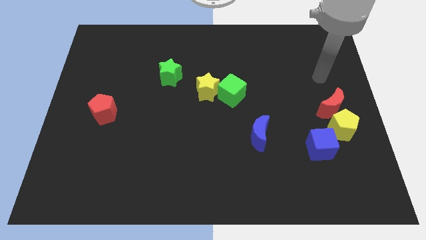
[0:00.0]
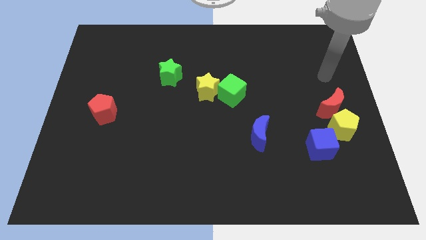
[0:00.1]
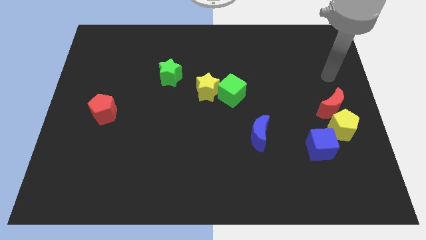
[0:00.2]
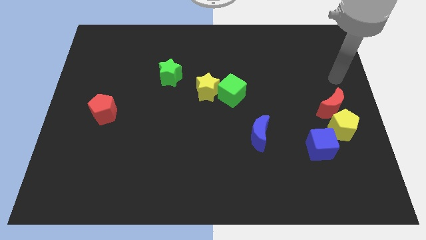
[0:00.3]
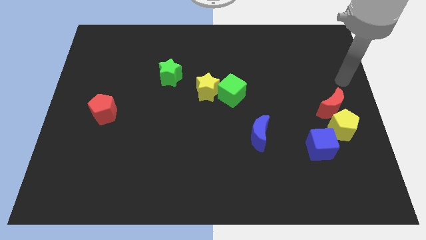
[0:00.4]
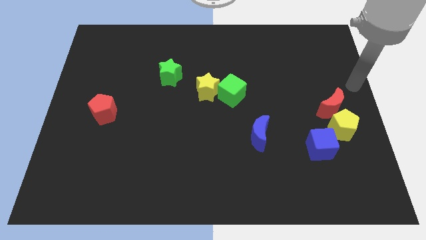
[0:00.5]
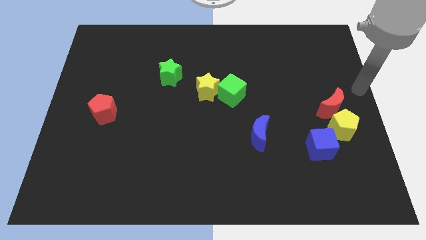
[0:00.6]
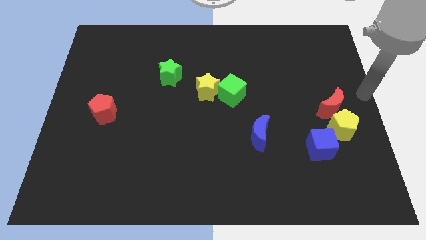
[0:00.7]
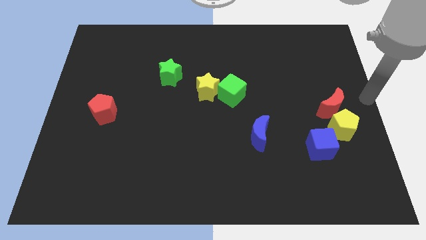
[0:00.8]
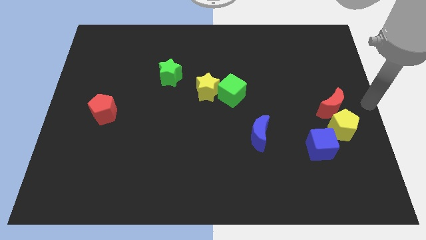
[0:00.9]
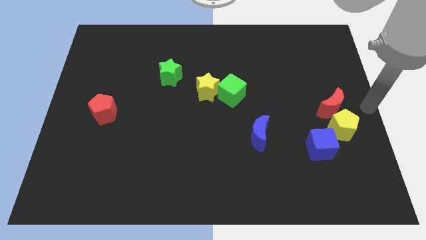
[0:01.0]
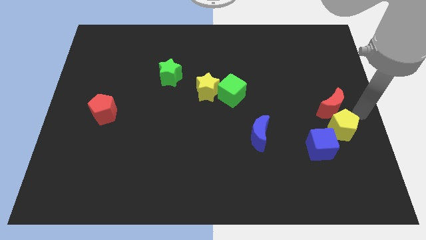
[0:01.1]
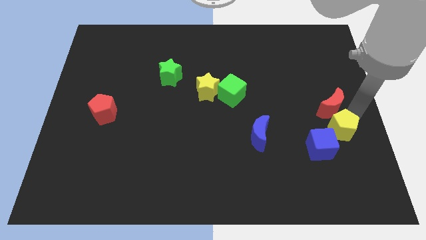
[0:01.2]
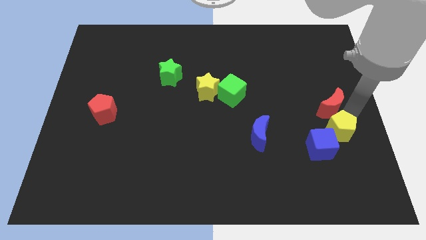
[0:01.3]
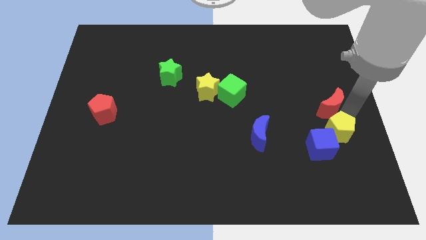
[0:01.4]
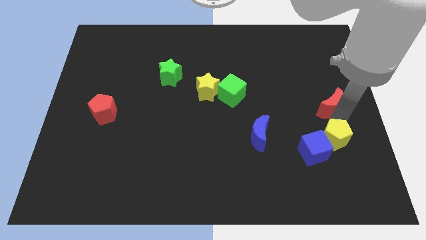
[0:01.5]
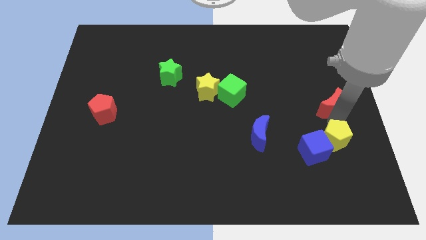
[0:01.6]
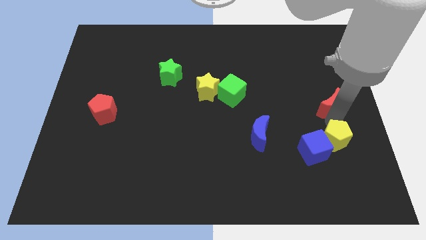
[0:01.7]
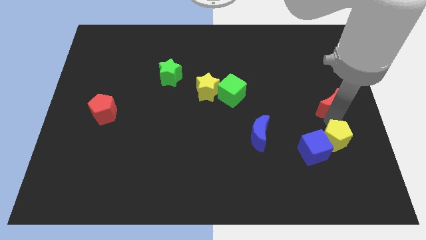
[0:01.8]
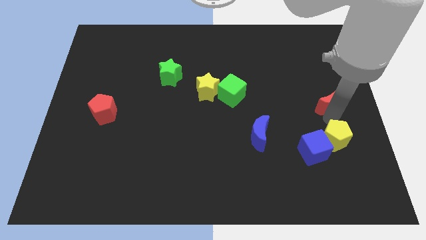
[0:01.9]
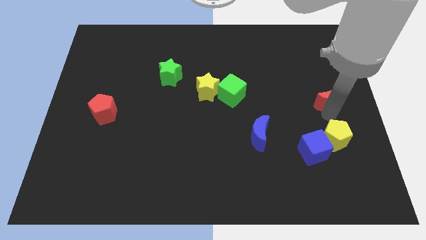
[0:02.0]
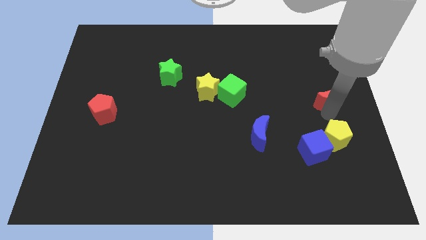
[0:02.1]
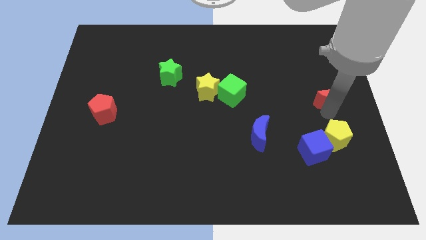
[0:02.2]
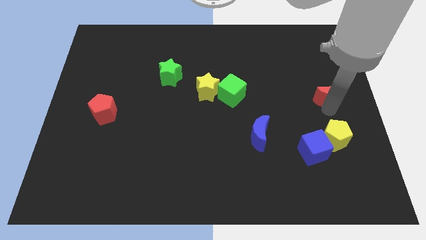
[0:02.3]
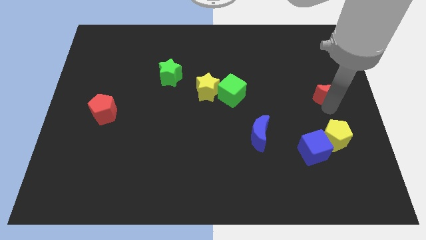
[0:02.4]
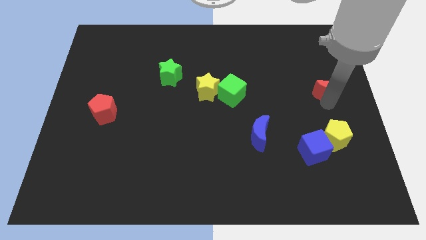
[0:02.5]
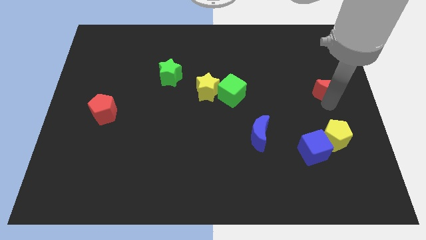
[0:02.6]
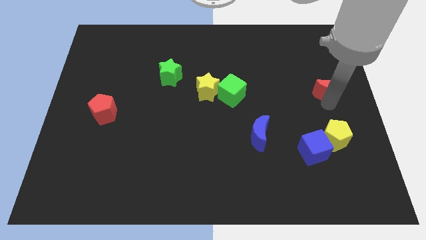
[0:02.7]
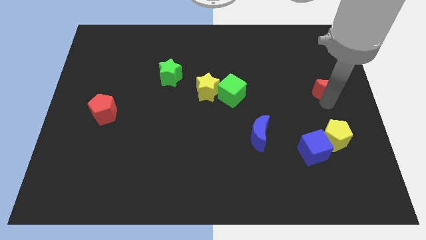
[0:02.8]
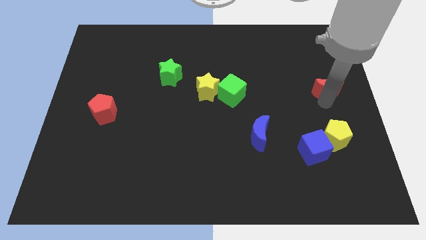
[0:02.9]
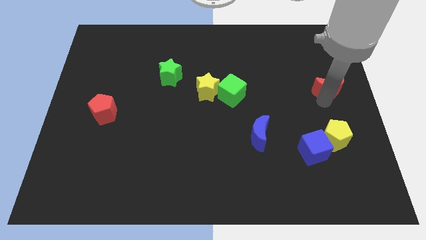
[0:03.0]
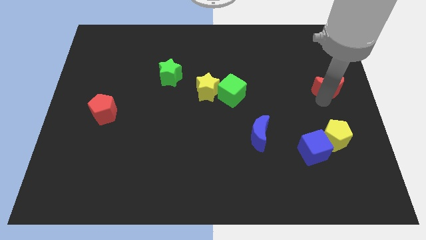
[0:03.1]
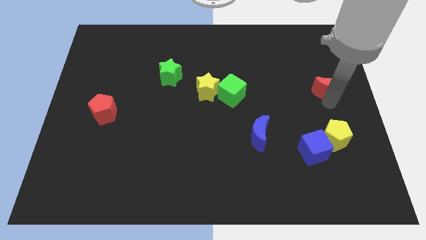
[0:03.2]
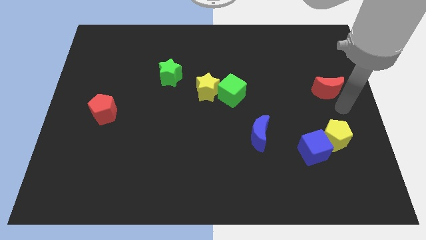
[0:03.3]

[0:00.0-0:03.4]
push the red crescent slightly to the top

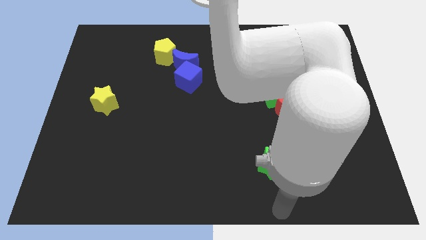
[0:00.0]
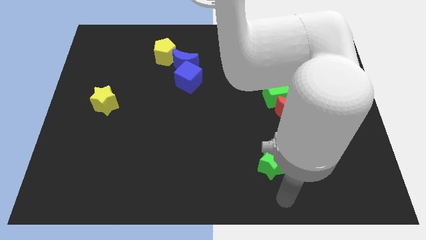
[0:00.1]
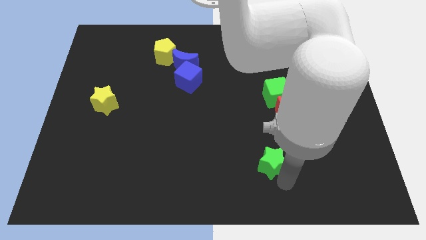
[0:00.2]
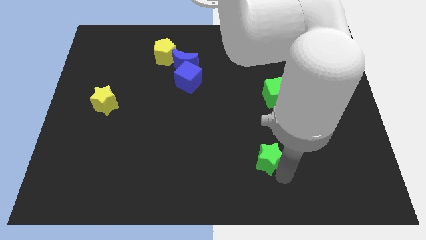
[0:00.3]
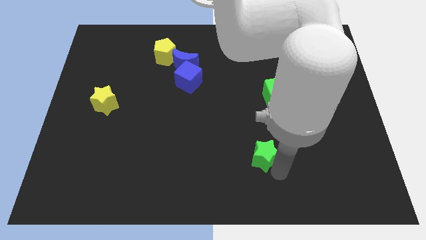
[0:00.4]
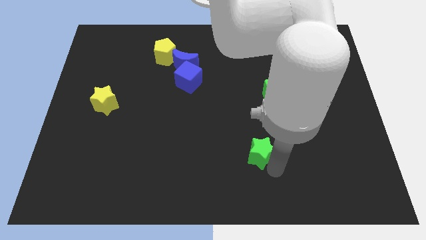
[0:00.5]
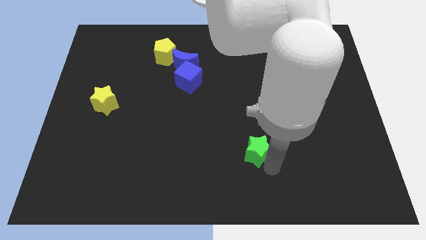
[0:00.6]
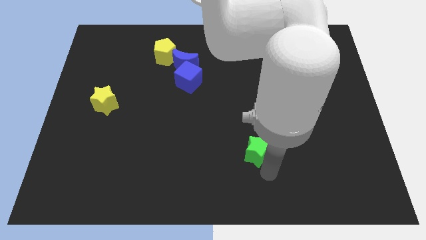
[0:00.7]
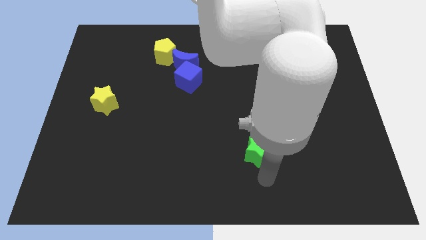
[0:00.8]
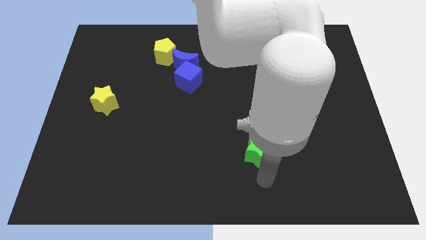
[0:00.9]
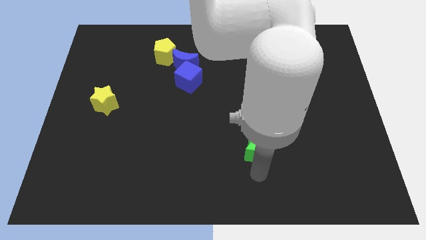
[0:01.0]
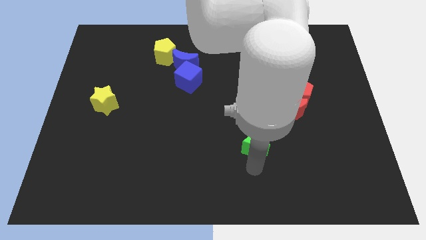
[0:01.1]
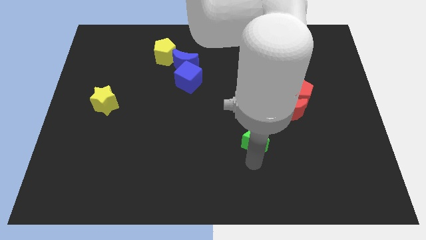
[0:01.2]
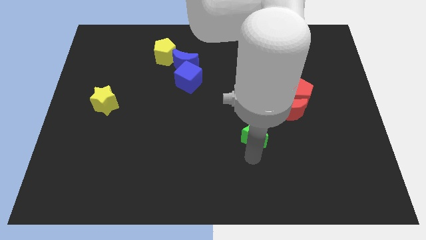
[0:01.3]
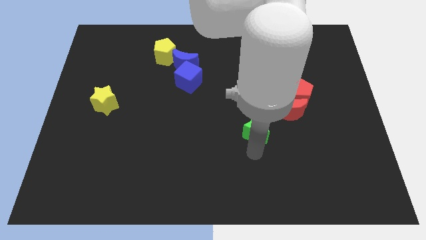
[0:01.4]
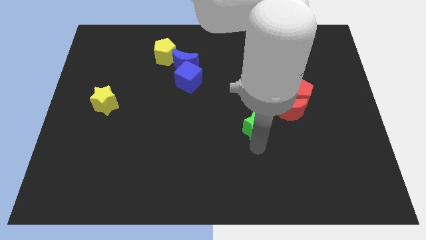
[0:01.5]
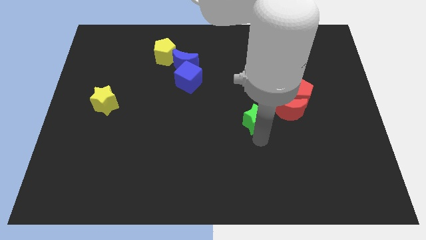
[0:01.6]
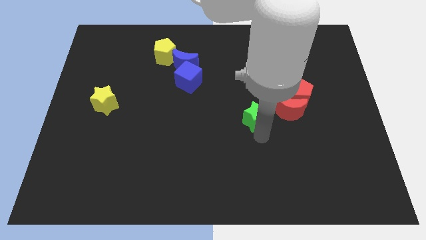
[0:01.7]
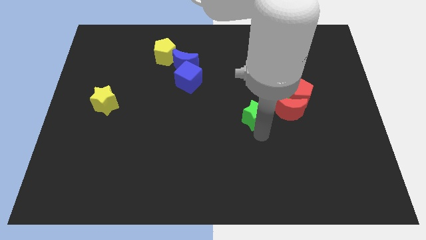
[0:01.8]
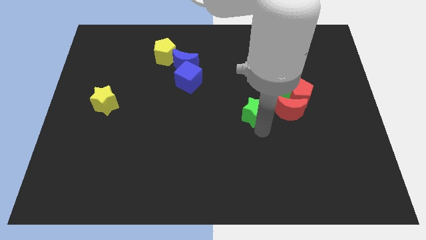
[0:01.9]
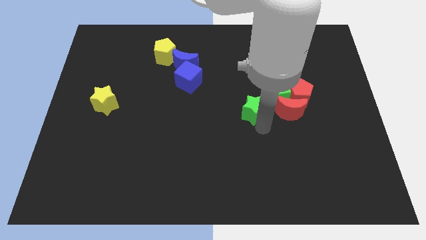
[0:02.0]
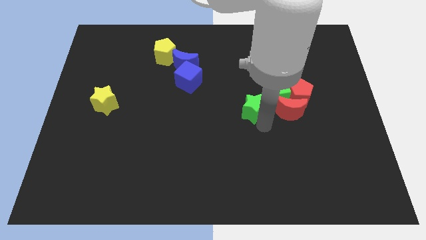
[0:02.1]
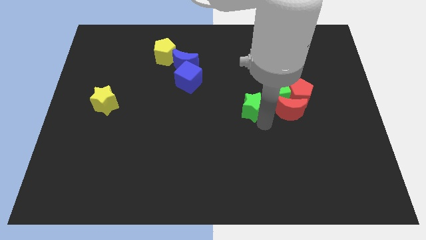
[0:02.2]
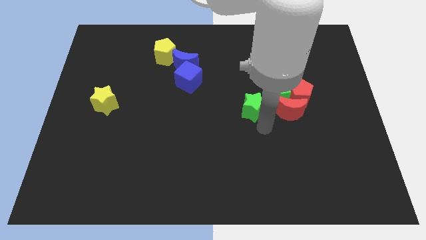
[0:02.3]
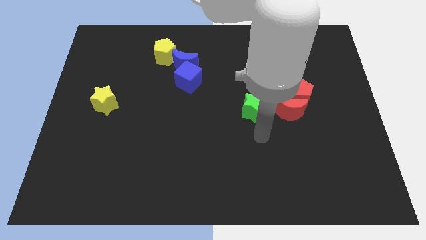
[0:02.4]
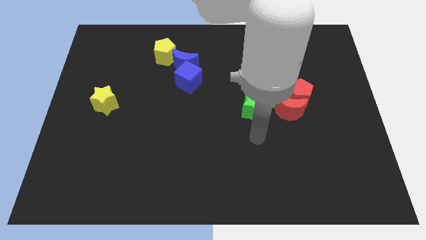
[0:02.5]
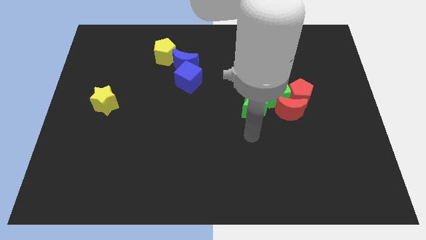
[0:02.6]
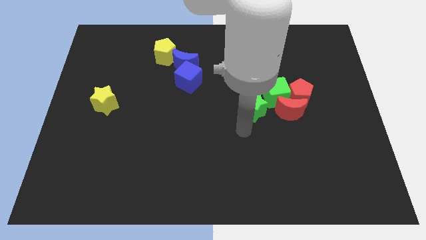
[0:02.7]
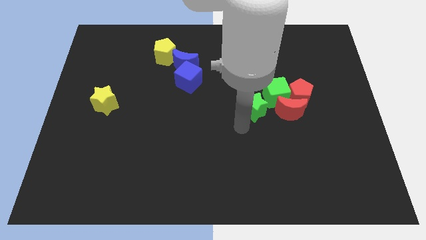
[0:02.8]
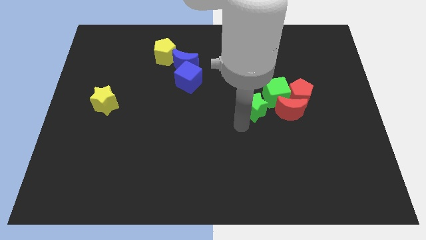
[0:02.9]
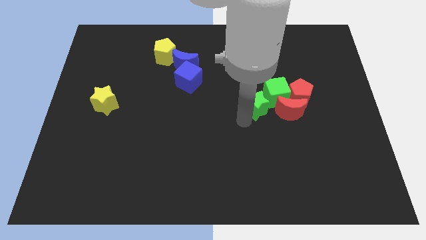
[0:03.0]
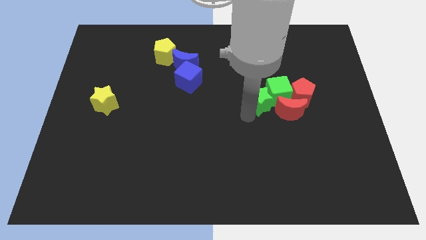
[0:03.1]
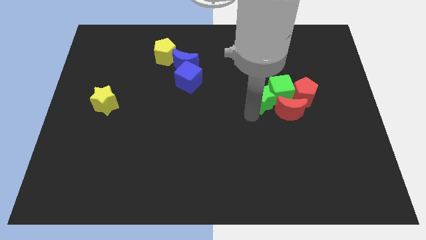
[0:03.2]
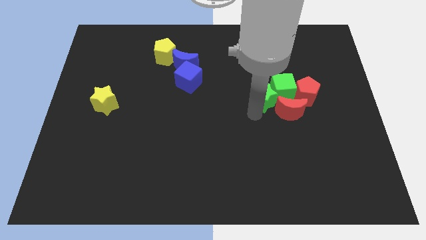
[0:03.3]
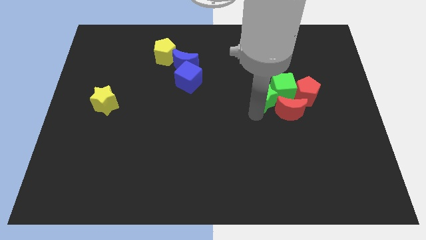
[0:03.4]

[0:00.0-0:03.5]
push the green star into the green cube

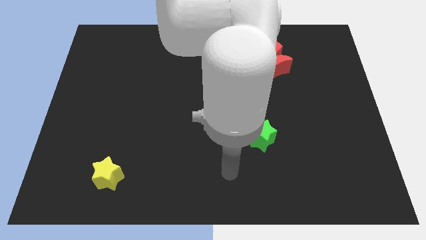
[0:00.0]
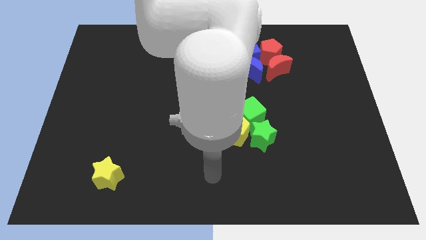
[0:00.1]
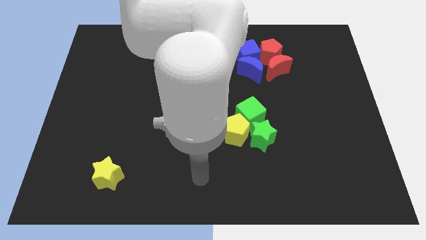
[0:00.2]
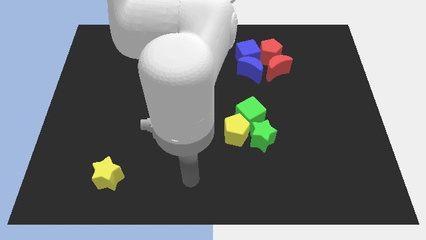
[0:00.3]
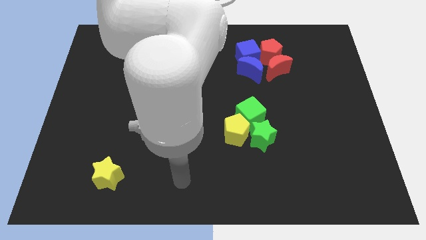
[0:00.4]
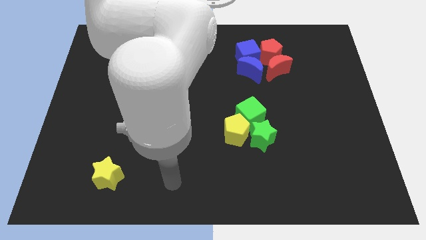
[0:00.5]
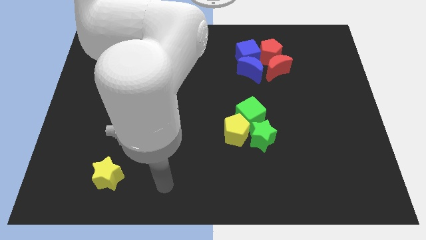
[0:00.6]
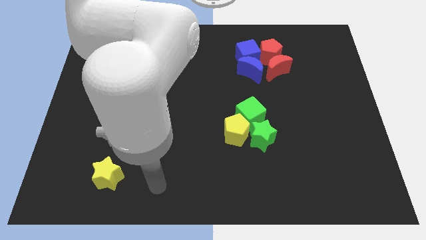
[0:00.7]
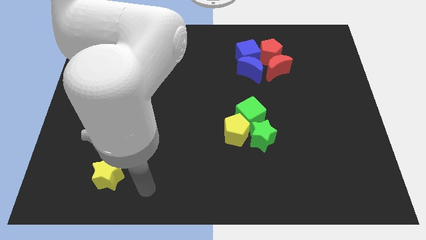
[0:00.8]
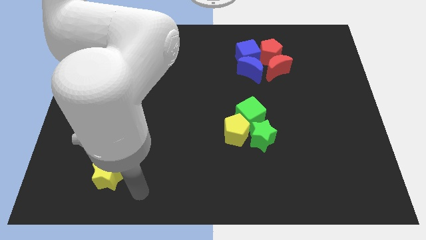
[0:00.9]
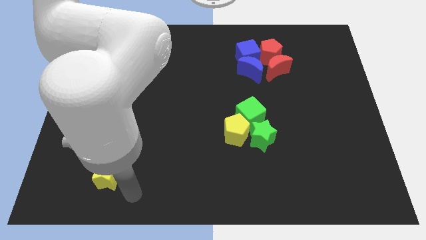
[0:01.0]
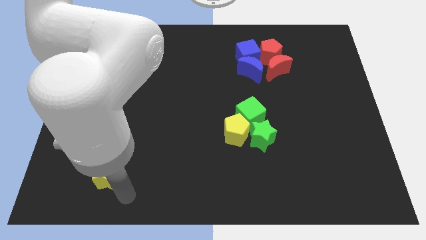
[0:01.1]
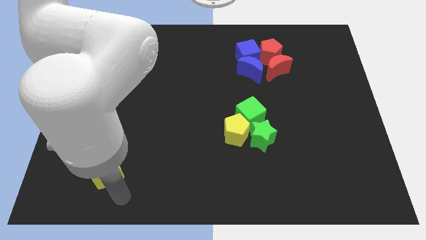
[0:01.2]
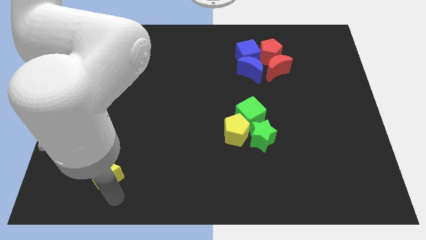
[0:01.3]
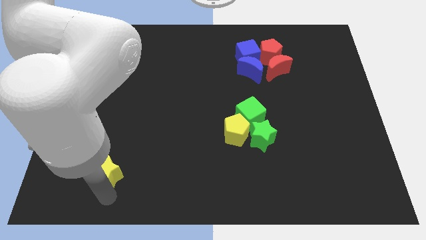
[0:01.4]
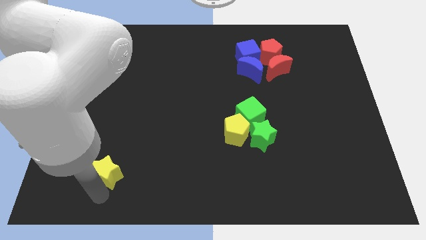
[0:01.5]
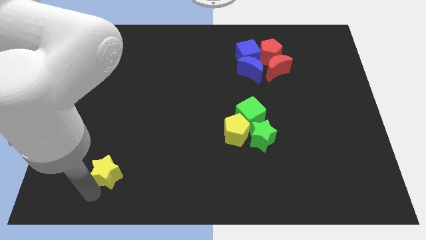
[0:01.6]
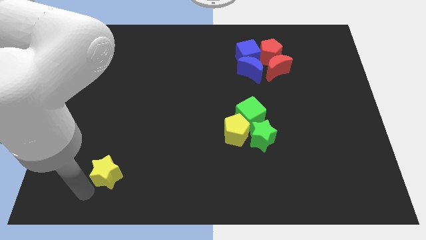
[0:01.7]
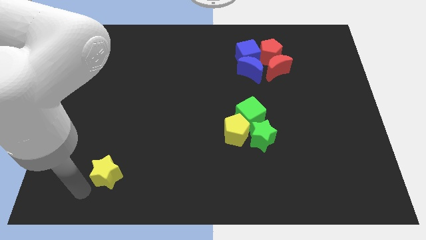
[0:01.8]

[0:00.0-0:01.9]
move the arm towards yellow star

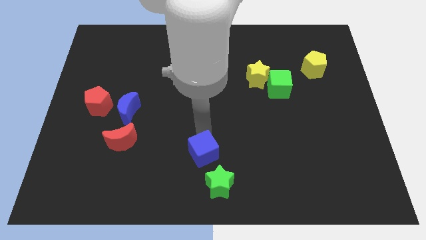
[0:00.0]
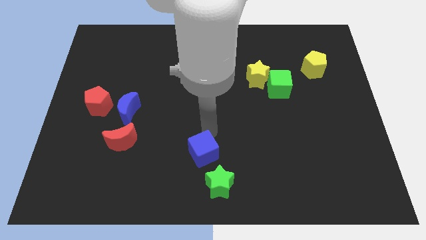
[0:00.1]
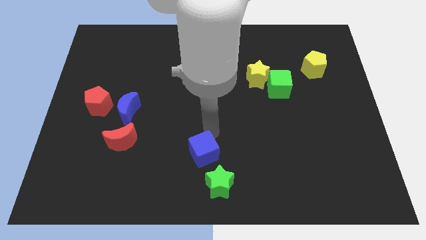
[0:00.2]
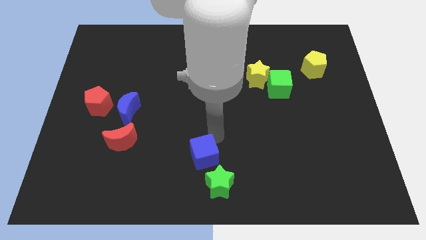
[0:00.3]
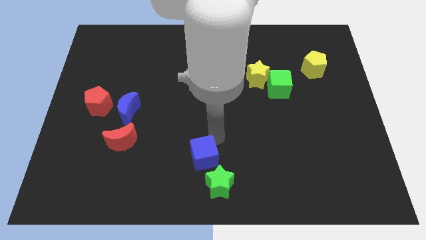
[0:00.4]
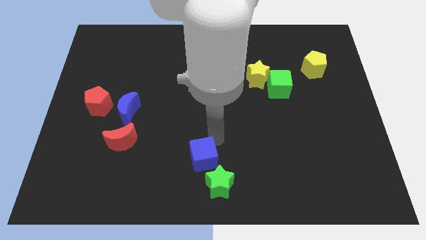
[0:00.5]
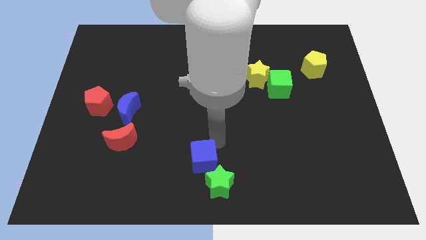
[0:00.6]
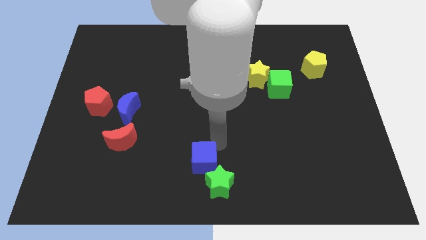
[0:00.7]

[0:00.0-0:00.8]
move blue cube close to green star
